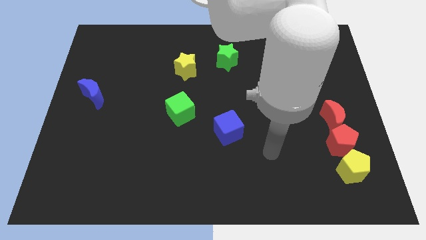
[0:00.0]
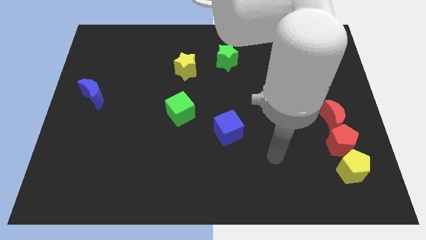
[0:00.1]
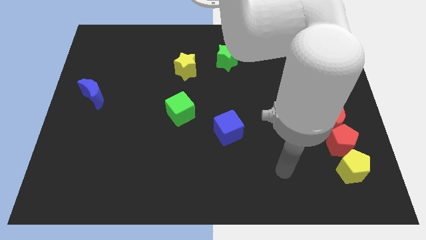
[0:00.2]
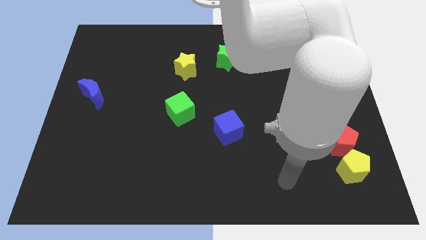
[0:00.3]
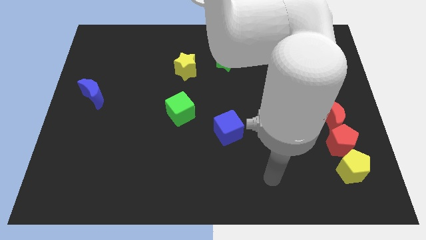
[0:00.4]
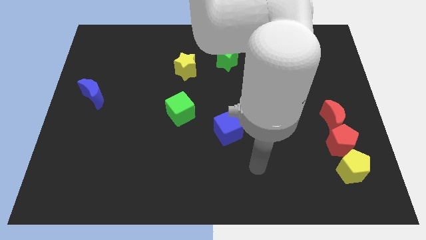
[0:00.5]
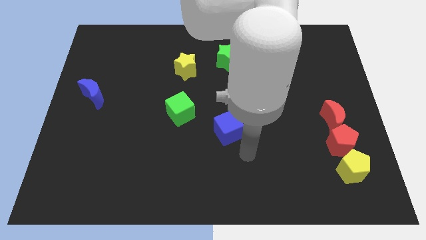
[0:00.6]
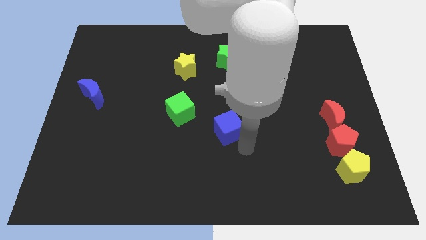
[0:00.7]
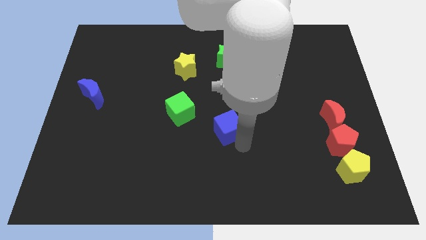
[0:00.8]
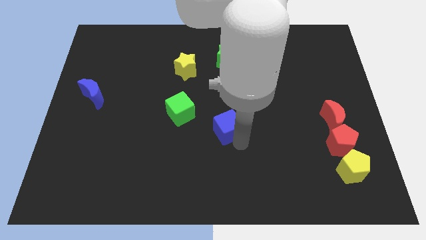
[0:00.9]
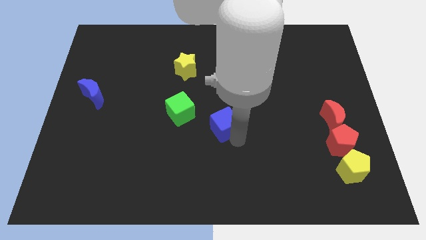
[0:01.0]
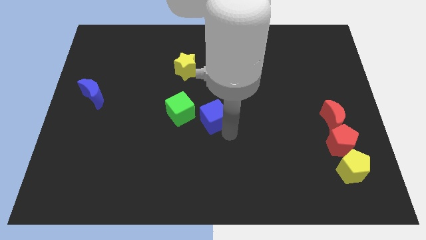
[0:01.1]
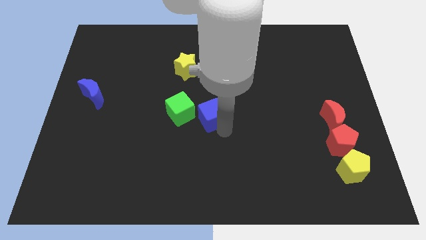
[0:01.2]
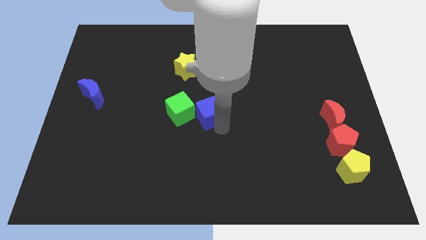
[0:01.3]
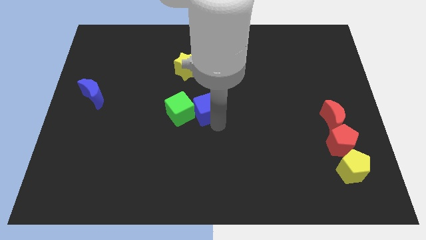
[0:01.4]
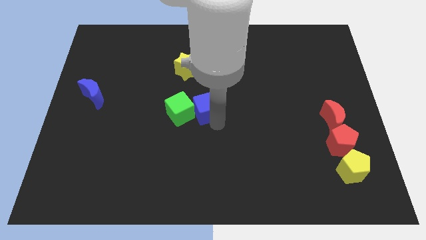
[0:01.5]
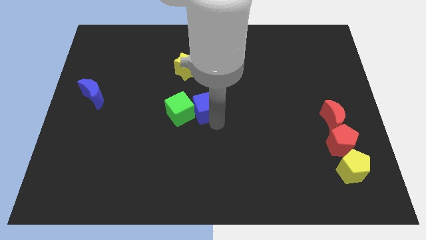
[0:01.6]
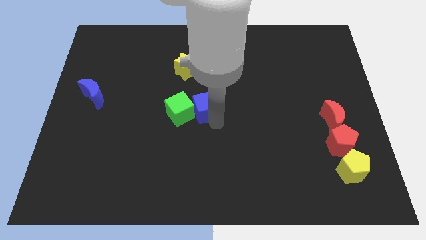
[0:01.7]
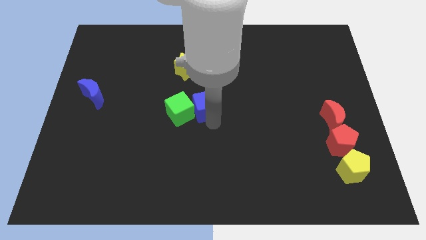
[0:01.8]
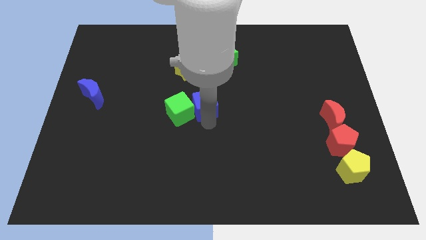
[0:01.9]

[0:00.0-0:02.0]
slide the blue cube into the right side of the green cube

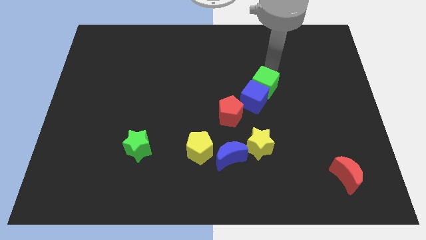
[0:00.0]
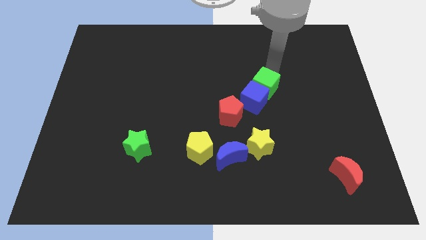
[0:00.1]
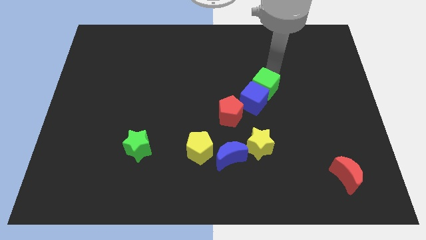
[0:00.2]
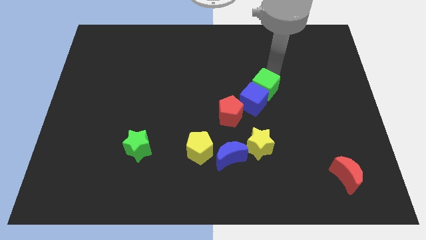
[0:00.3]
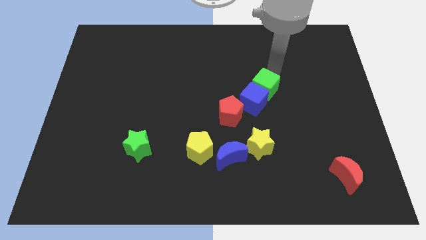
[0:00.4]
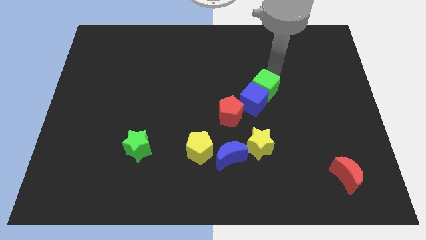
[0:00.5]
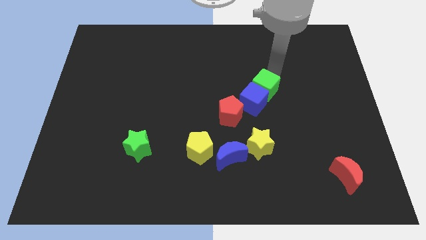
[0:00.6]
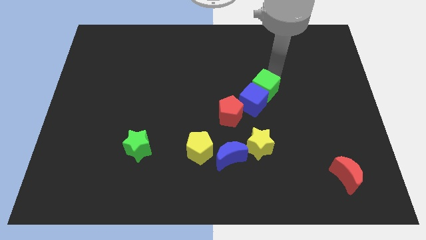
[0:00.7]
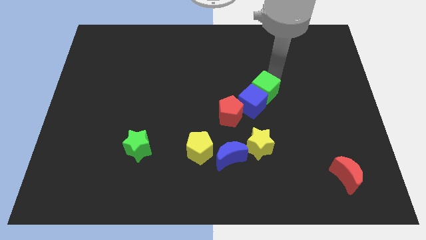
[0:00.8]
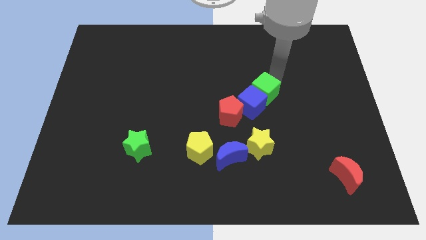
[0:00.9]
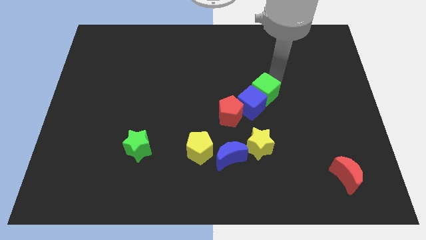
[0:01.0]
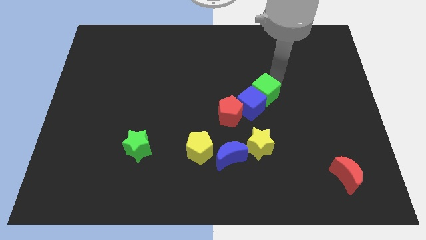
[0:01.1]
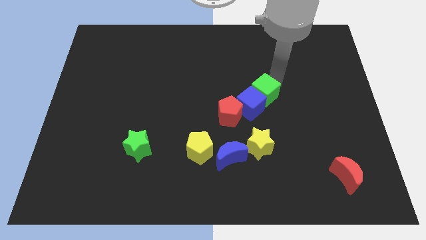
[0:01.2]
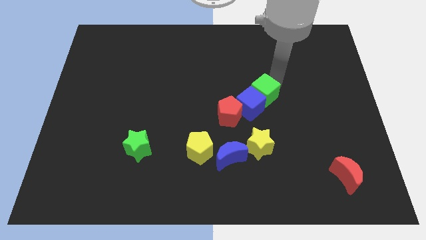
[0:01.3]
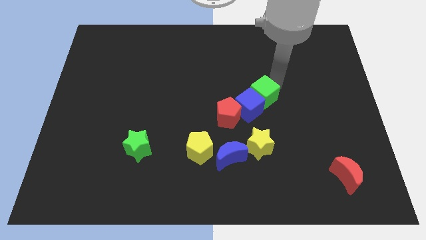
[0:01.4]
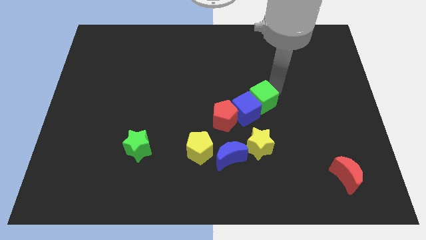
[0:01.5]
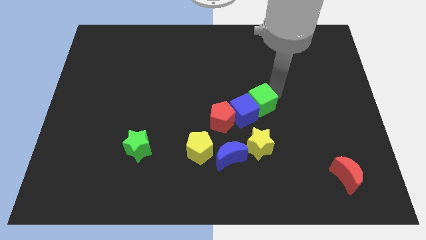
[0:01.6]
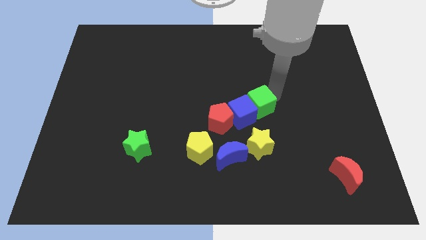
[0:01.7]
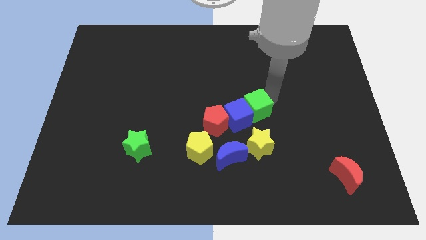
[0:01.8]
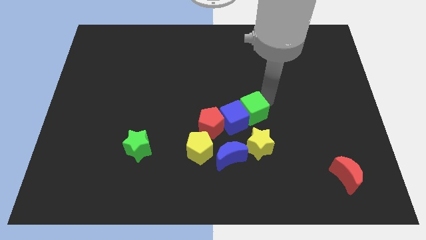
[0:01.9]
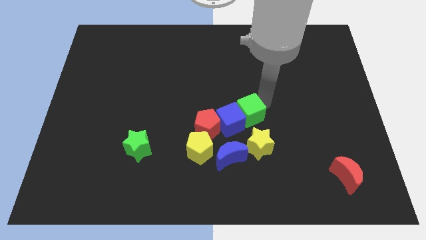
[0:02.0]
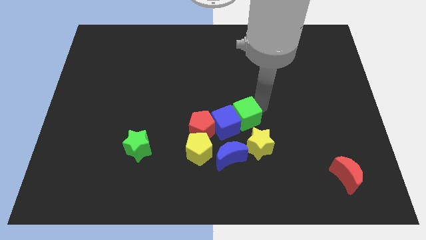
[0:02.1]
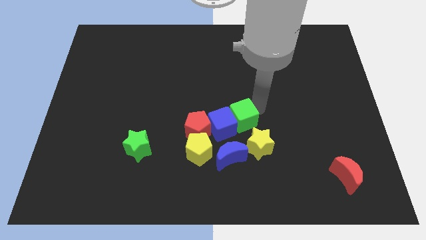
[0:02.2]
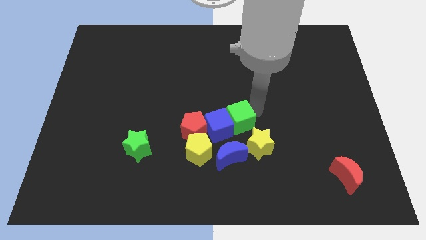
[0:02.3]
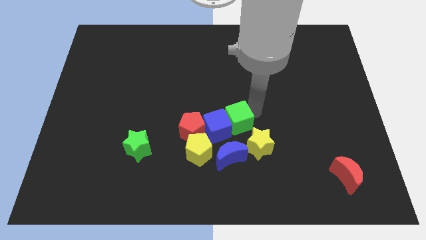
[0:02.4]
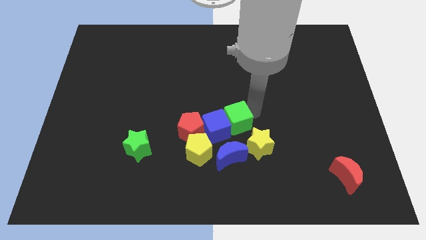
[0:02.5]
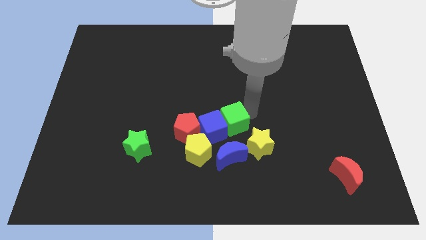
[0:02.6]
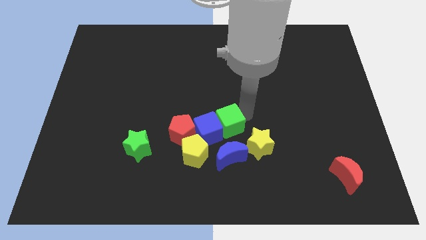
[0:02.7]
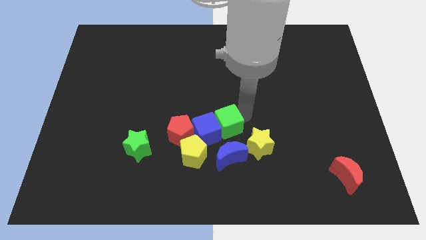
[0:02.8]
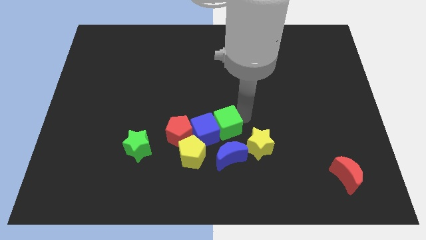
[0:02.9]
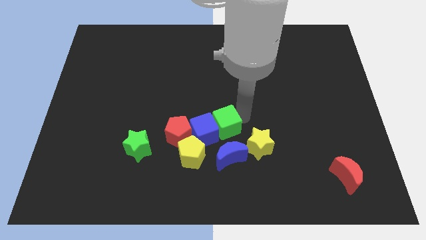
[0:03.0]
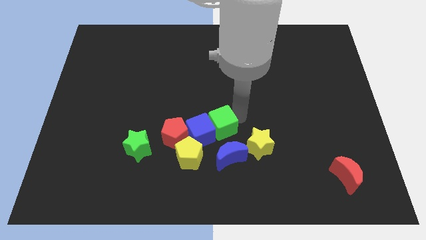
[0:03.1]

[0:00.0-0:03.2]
push the green cube blue cube and red pentagon towards the left

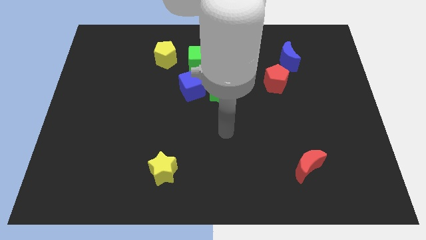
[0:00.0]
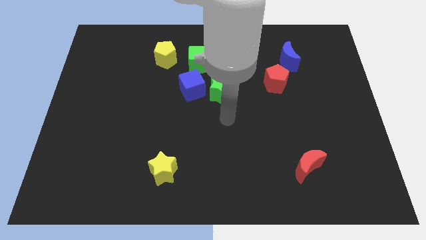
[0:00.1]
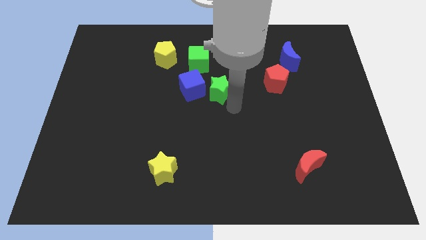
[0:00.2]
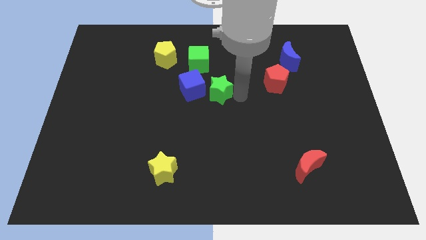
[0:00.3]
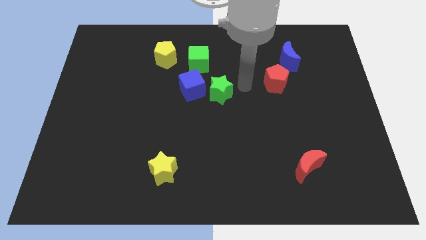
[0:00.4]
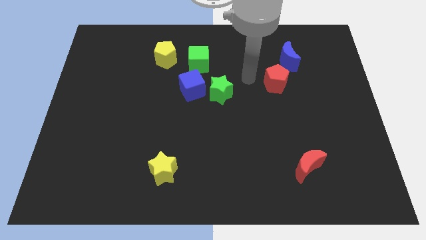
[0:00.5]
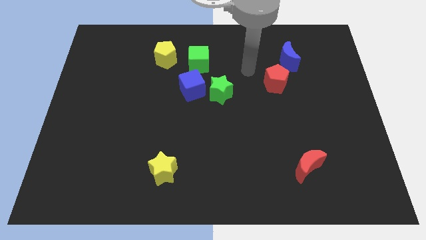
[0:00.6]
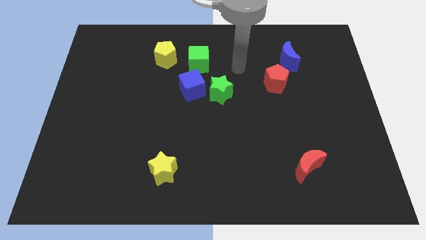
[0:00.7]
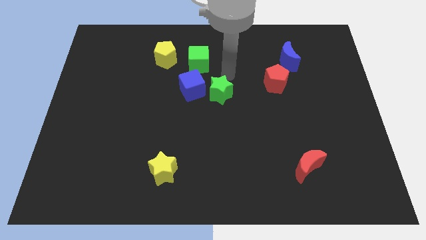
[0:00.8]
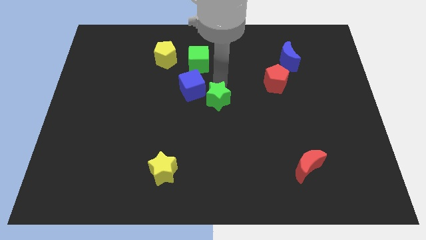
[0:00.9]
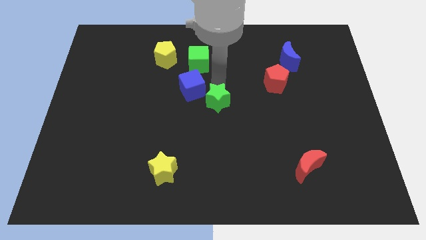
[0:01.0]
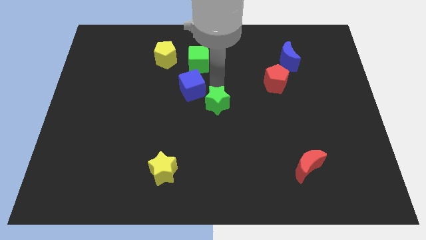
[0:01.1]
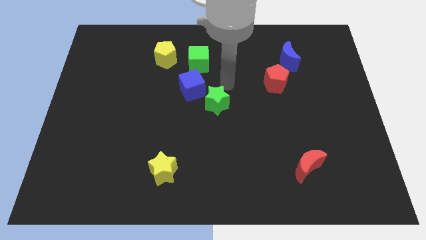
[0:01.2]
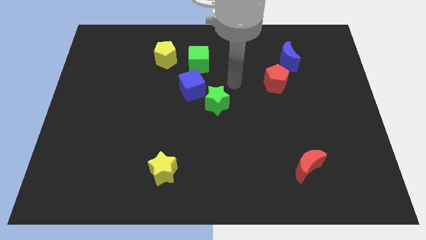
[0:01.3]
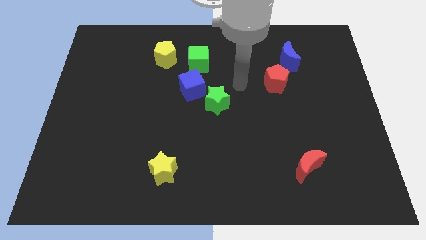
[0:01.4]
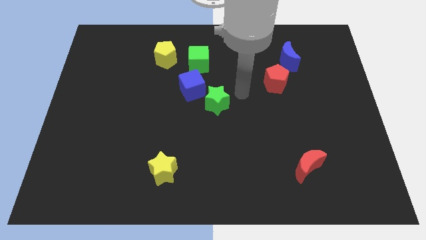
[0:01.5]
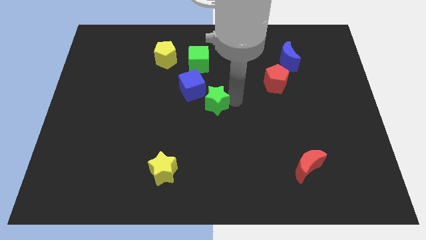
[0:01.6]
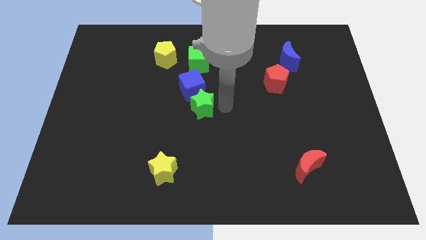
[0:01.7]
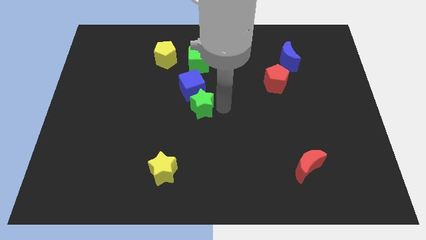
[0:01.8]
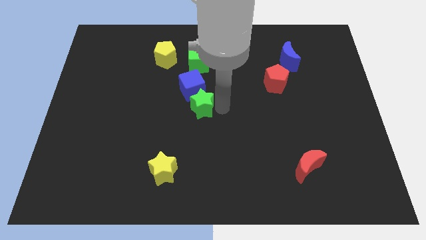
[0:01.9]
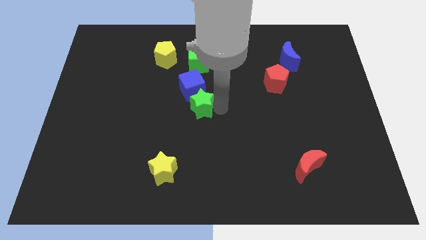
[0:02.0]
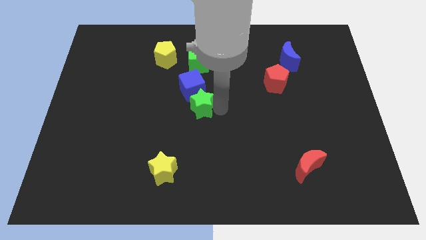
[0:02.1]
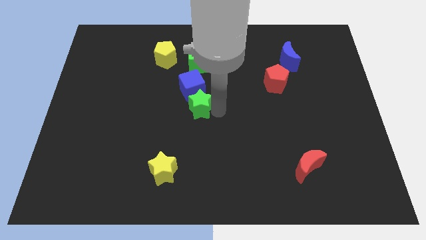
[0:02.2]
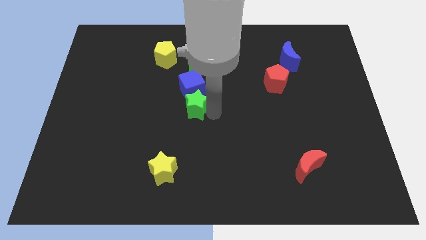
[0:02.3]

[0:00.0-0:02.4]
place the green star below the blue cube

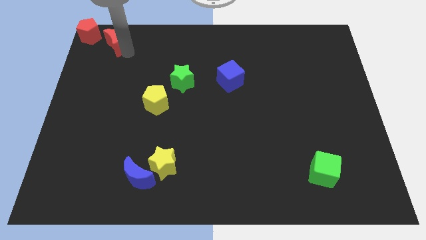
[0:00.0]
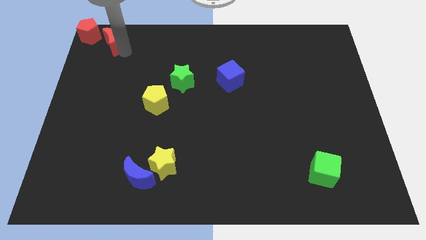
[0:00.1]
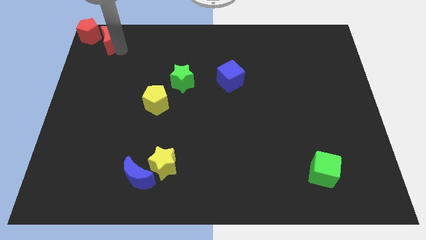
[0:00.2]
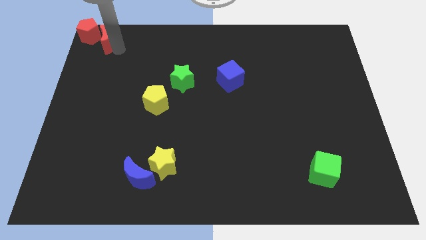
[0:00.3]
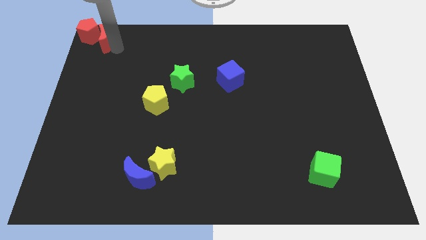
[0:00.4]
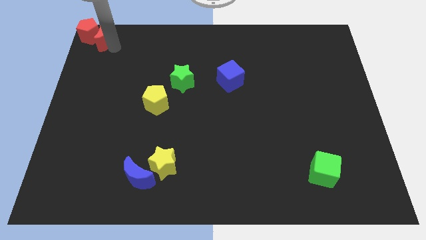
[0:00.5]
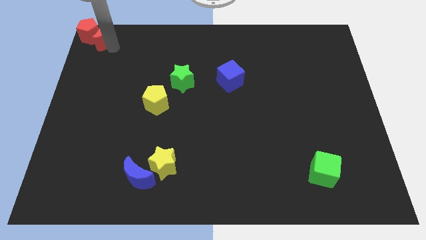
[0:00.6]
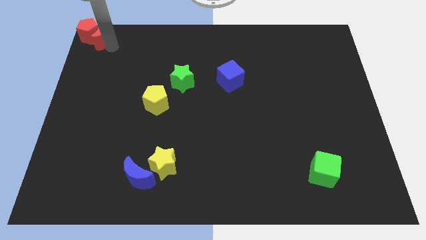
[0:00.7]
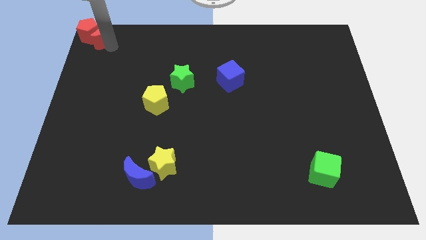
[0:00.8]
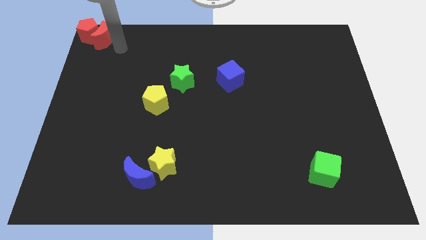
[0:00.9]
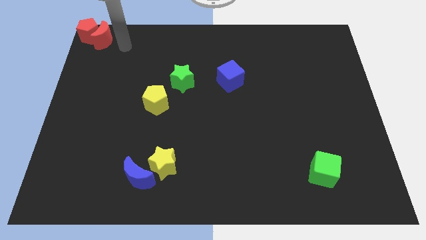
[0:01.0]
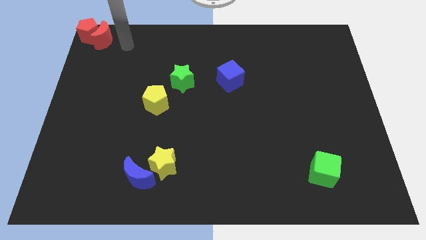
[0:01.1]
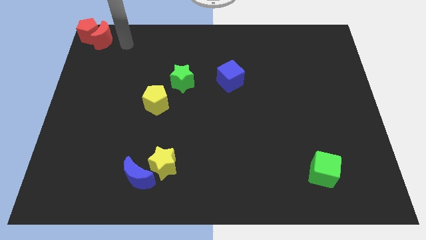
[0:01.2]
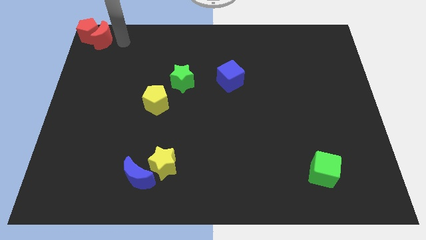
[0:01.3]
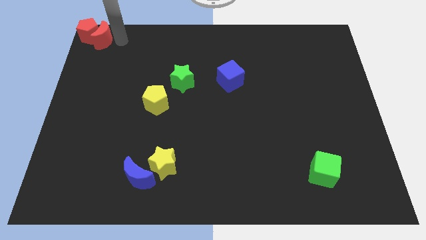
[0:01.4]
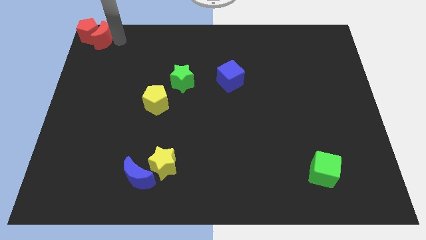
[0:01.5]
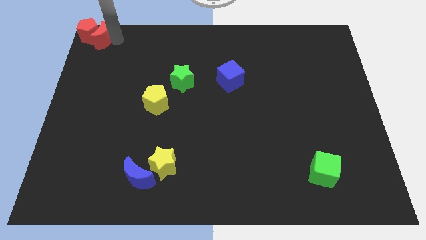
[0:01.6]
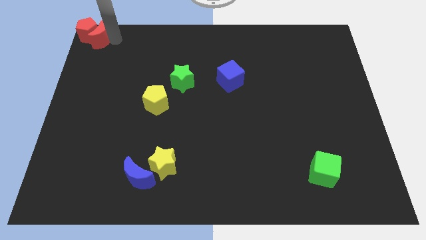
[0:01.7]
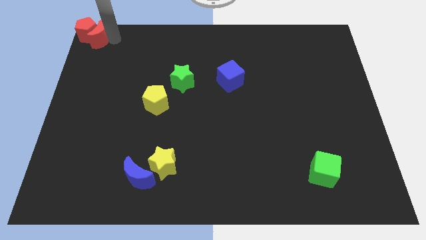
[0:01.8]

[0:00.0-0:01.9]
move the red moon into the red pentagon
